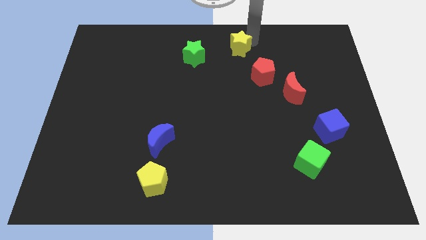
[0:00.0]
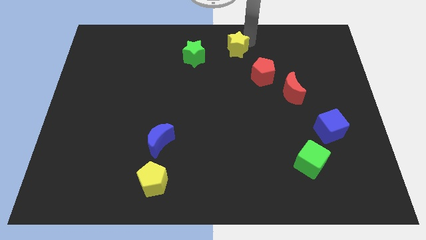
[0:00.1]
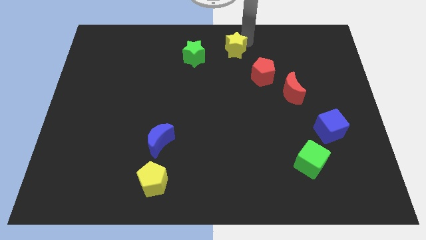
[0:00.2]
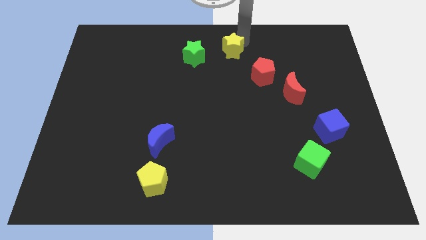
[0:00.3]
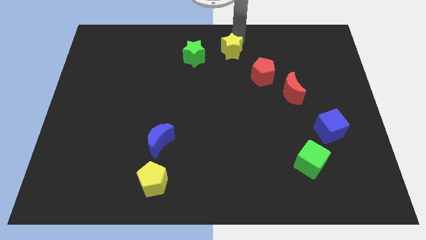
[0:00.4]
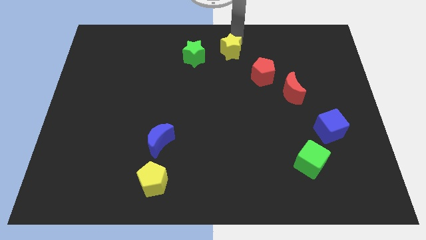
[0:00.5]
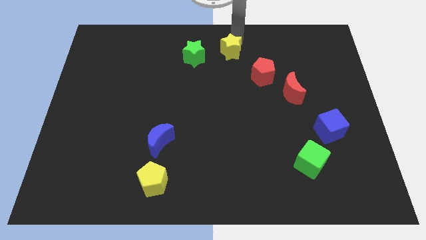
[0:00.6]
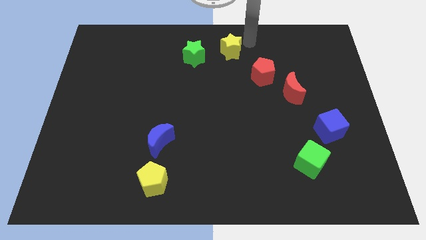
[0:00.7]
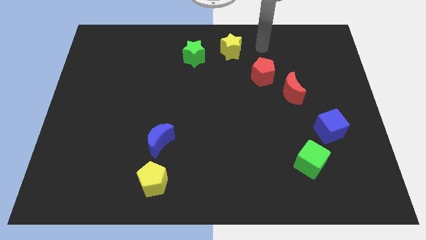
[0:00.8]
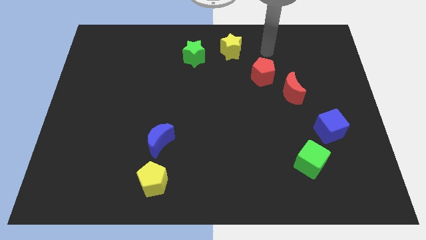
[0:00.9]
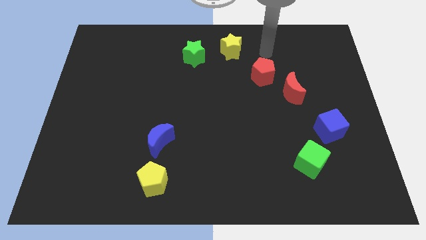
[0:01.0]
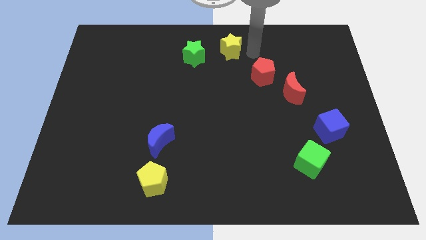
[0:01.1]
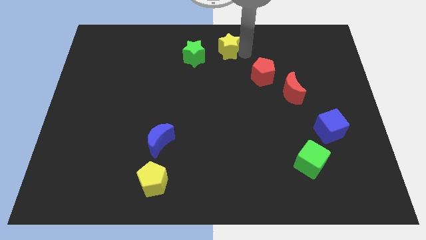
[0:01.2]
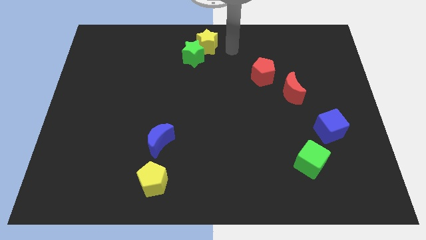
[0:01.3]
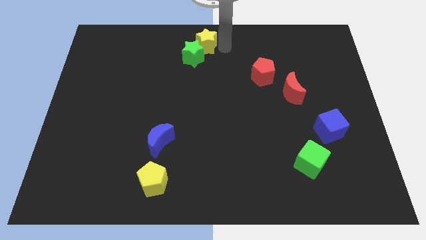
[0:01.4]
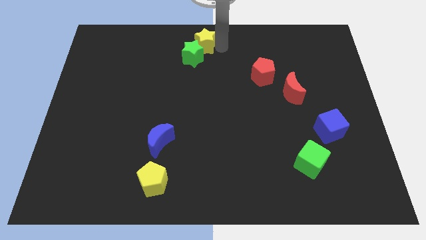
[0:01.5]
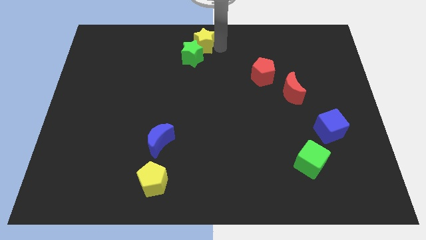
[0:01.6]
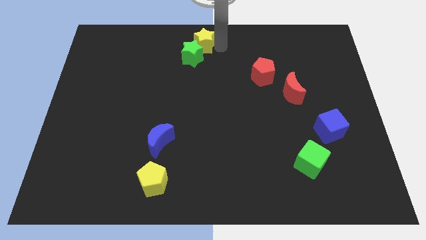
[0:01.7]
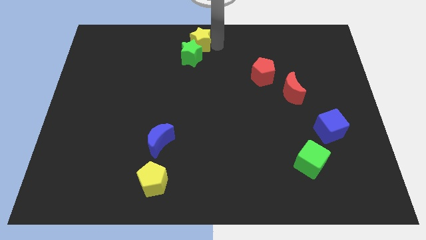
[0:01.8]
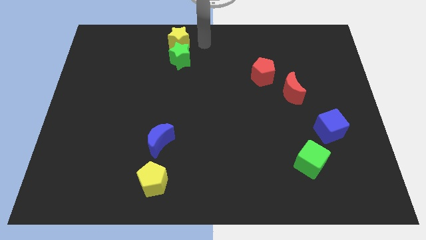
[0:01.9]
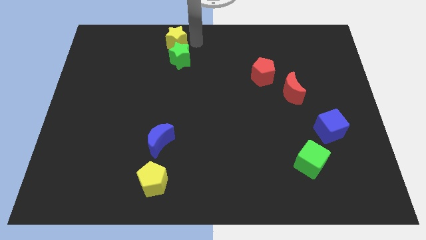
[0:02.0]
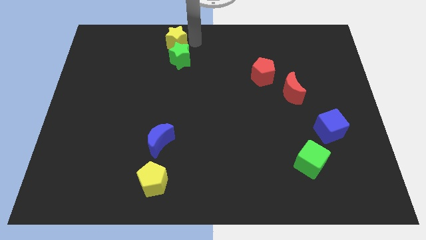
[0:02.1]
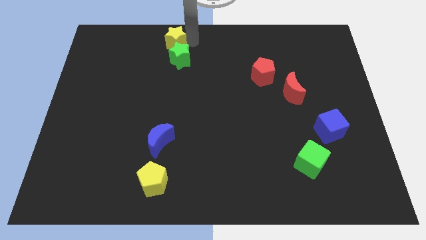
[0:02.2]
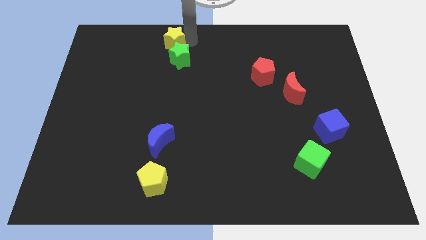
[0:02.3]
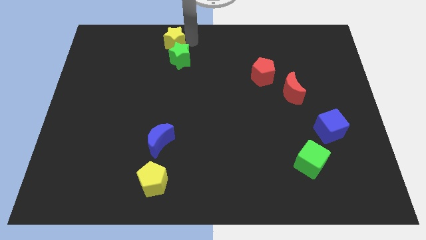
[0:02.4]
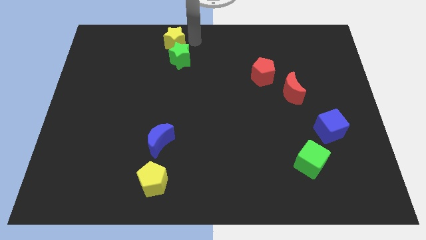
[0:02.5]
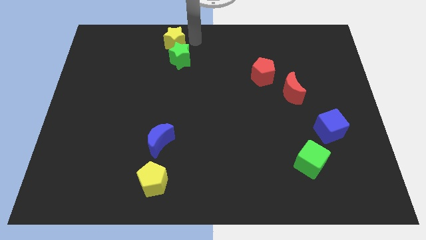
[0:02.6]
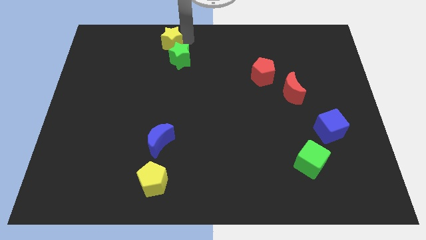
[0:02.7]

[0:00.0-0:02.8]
move the yellow star diagonal above the green star

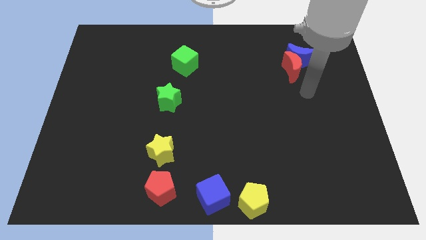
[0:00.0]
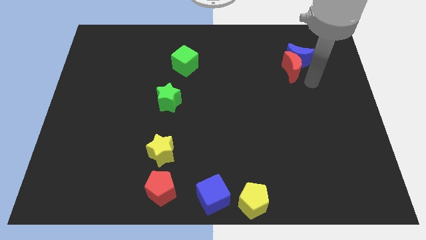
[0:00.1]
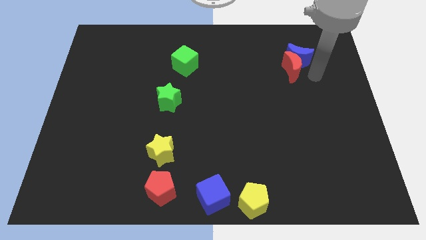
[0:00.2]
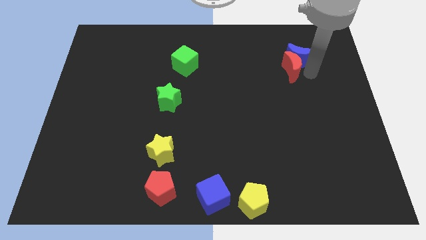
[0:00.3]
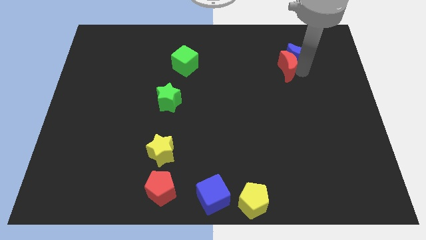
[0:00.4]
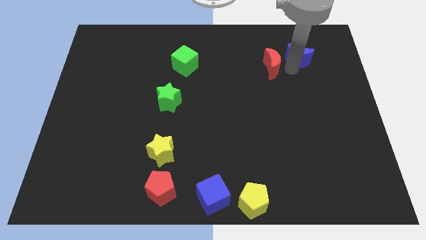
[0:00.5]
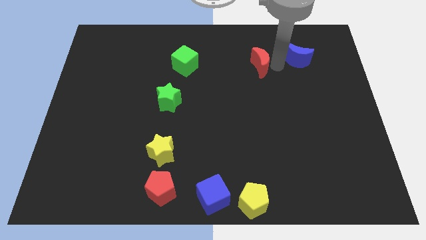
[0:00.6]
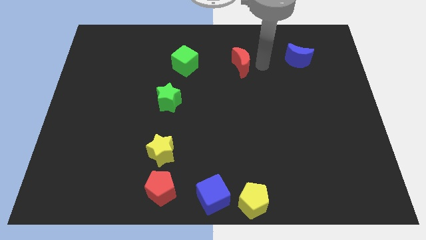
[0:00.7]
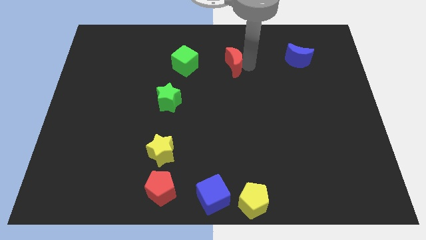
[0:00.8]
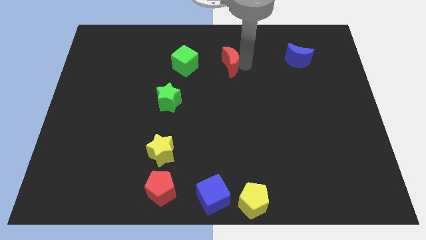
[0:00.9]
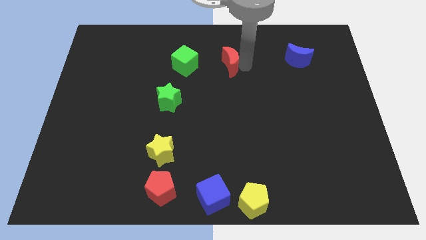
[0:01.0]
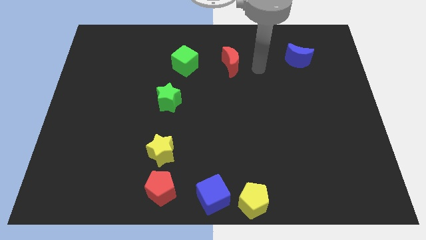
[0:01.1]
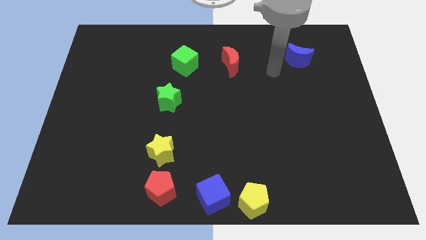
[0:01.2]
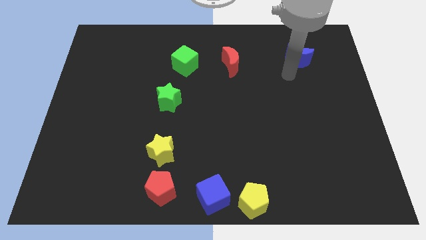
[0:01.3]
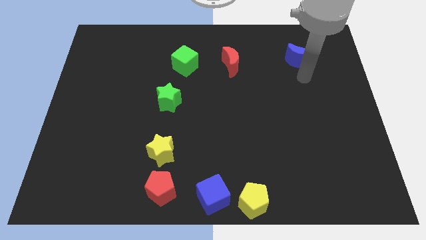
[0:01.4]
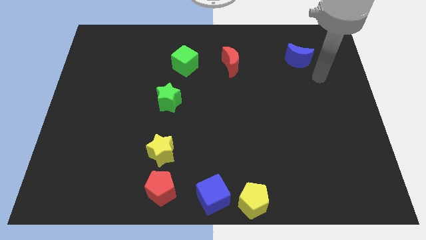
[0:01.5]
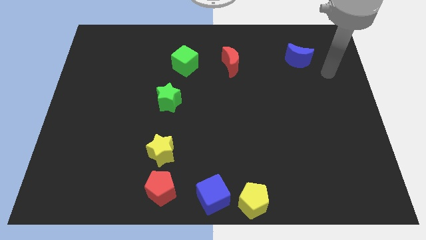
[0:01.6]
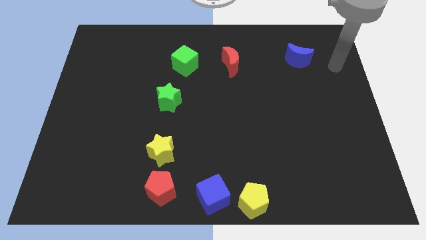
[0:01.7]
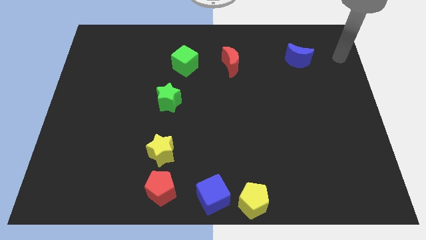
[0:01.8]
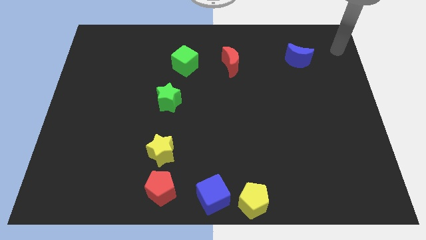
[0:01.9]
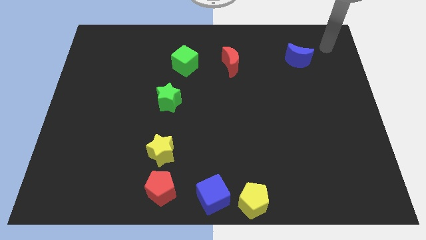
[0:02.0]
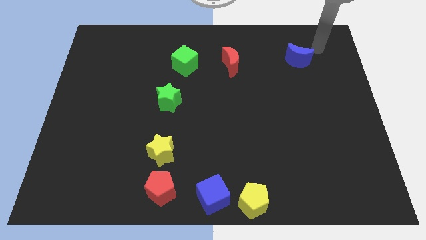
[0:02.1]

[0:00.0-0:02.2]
push red crescent between green block and blue crescent

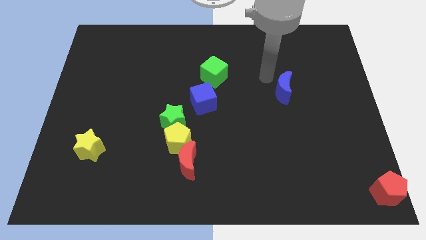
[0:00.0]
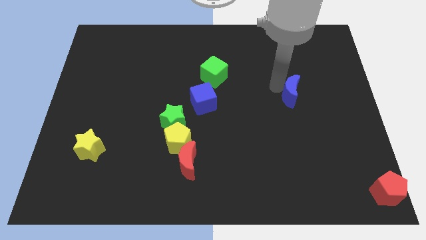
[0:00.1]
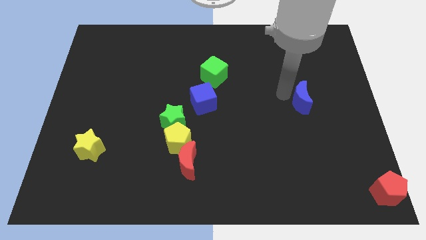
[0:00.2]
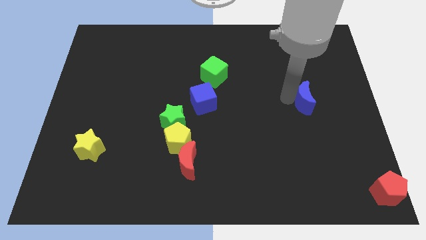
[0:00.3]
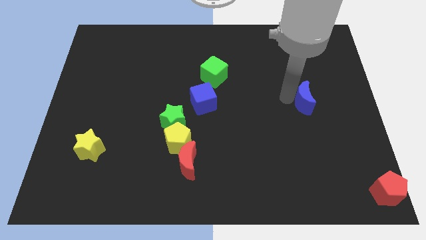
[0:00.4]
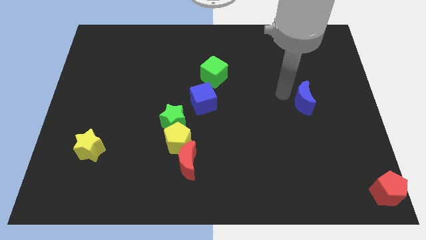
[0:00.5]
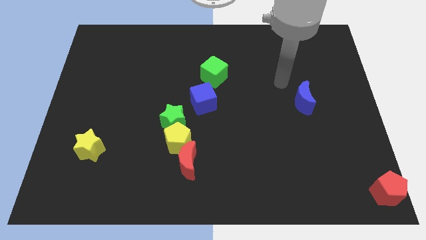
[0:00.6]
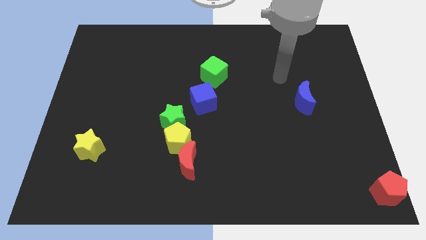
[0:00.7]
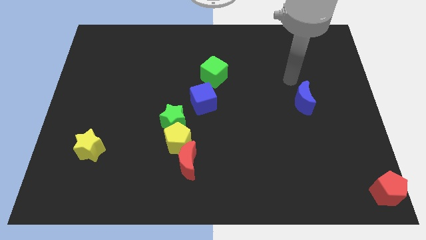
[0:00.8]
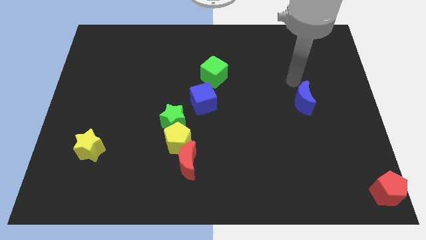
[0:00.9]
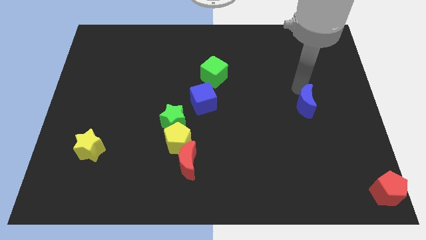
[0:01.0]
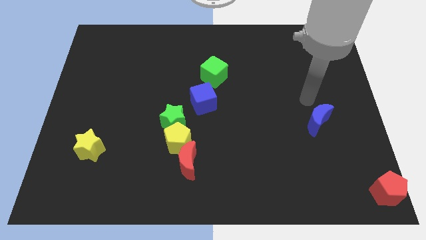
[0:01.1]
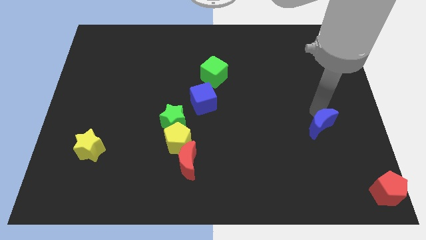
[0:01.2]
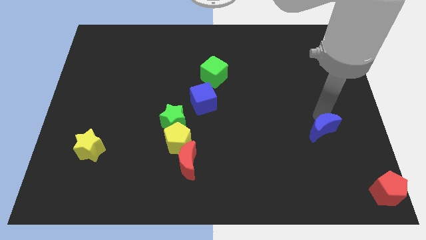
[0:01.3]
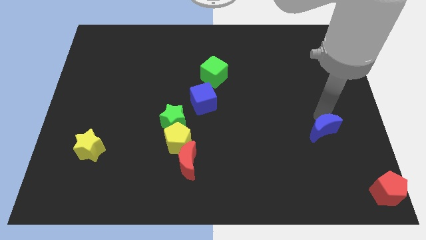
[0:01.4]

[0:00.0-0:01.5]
push the blue moon towards the red pentagon

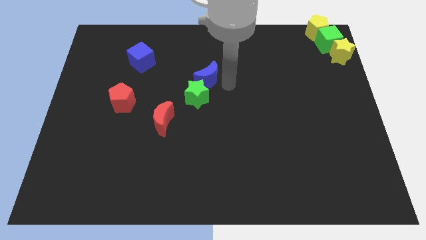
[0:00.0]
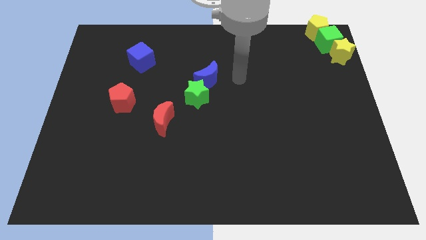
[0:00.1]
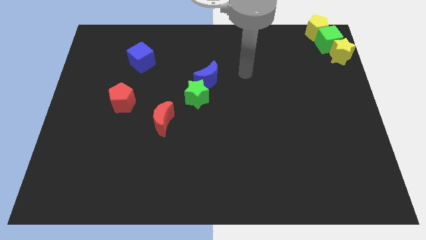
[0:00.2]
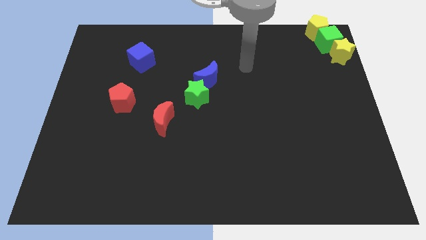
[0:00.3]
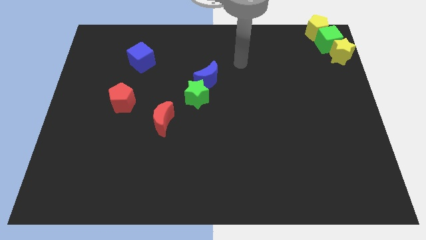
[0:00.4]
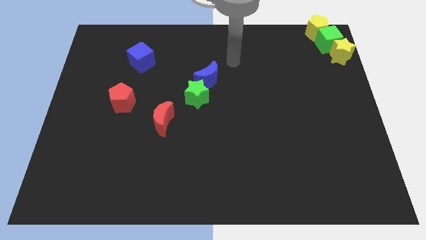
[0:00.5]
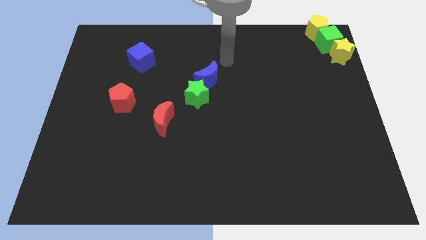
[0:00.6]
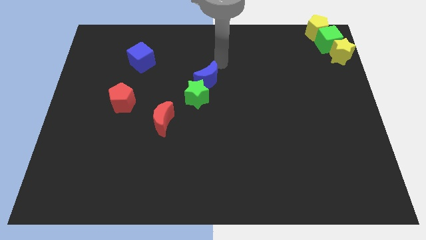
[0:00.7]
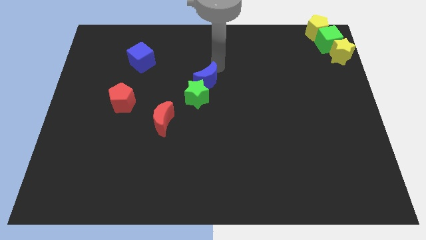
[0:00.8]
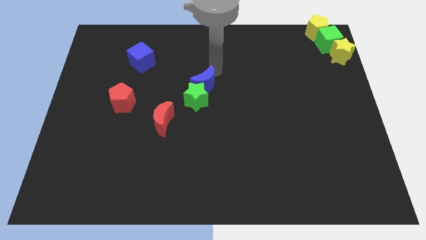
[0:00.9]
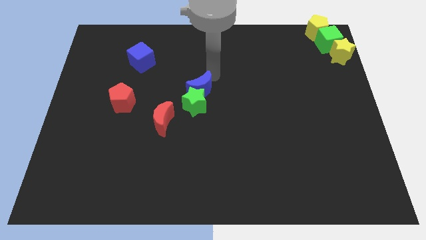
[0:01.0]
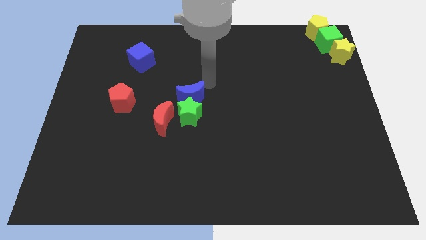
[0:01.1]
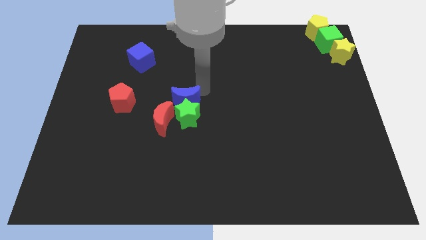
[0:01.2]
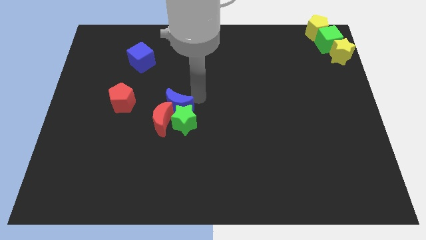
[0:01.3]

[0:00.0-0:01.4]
push the blue moon into the green star

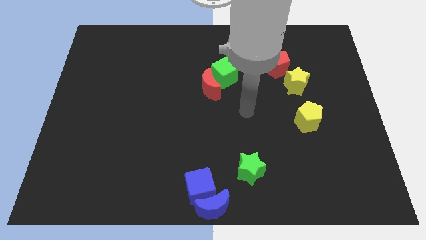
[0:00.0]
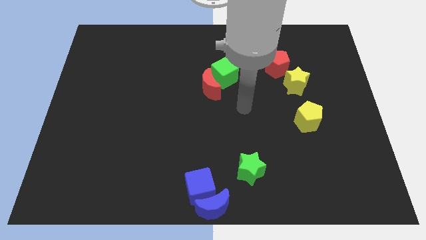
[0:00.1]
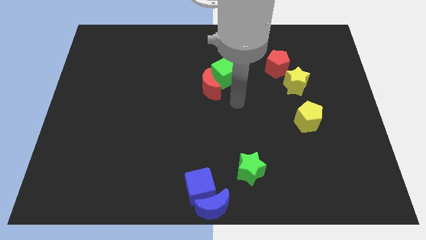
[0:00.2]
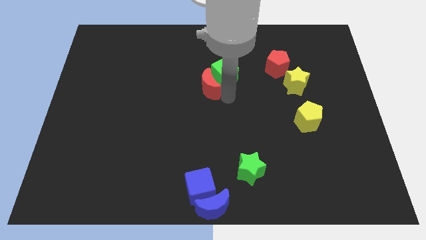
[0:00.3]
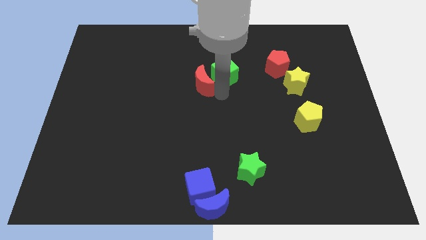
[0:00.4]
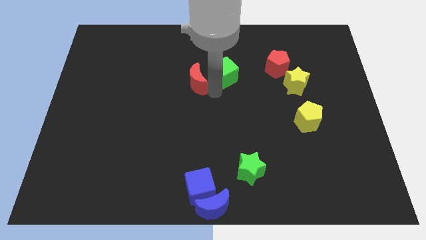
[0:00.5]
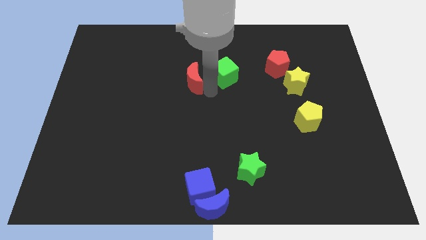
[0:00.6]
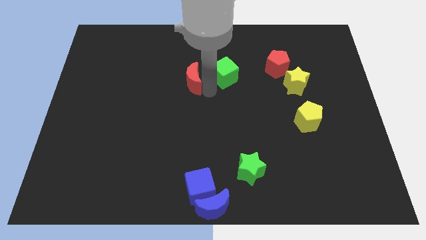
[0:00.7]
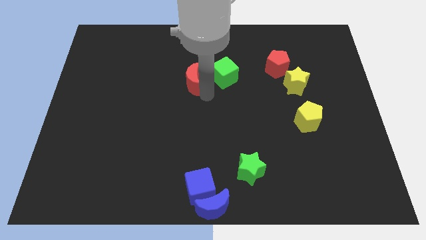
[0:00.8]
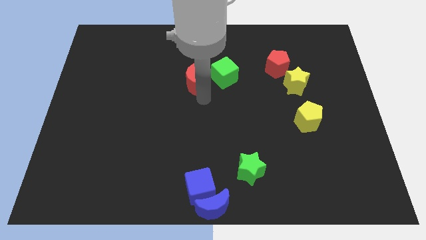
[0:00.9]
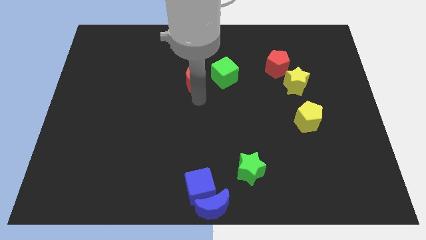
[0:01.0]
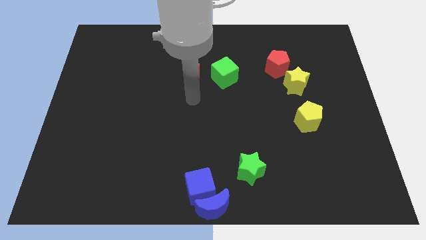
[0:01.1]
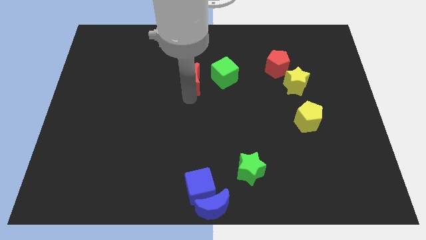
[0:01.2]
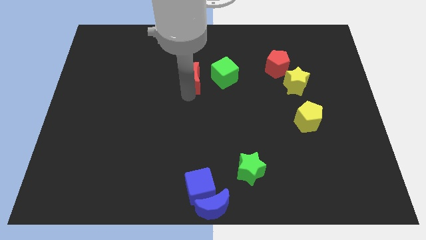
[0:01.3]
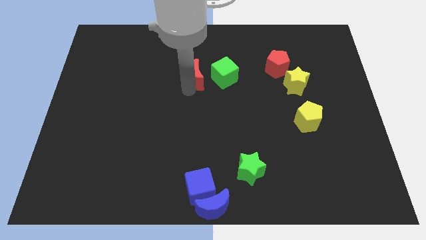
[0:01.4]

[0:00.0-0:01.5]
separate the red crescent from the green cube
